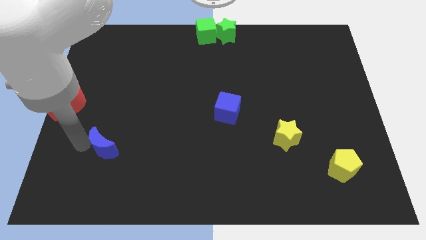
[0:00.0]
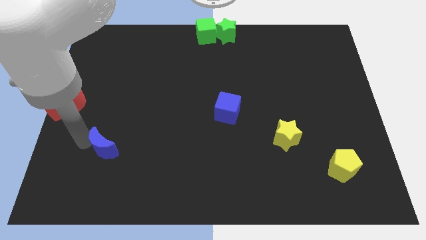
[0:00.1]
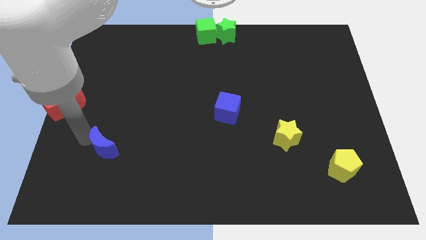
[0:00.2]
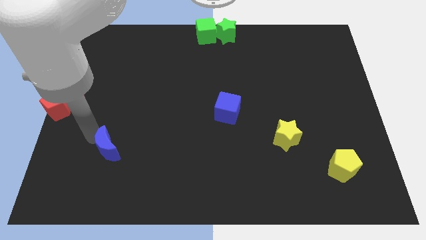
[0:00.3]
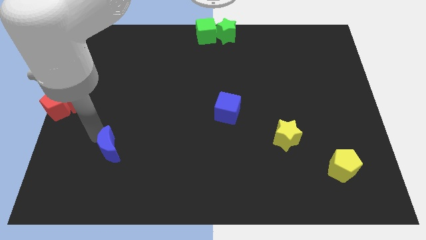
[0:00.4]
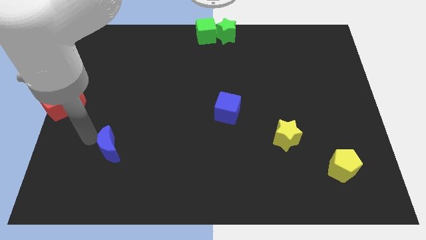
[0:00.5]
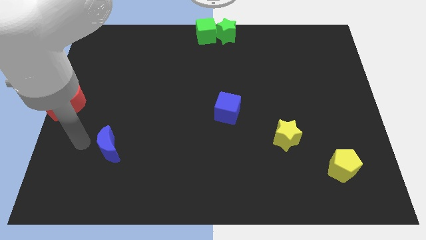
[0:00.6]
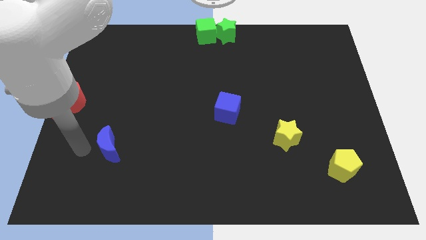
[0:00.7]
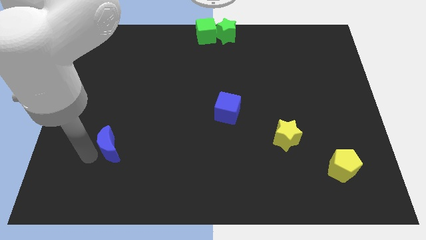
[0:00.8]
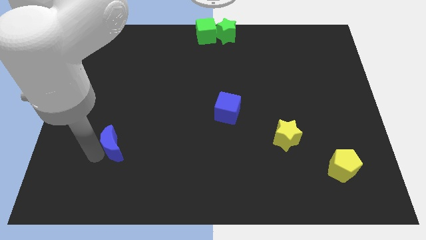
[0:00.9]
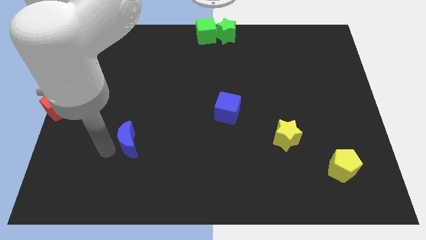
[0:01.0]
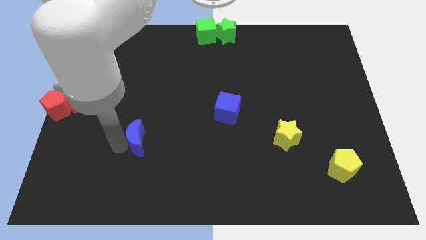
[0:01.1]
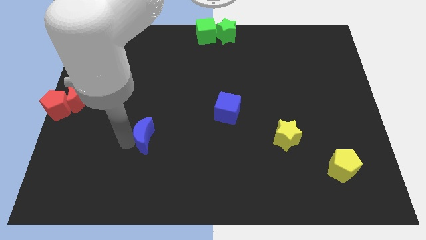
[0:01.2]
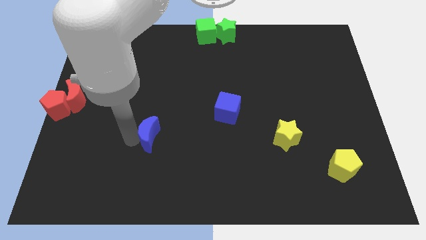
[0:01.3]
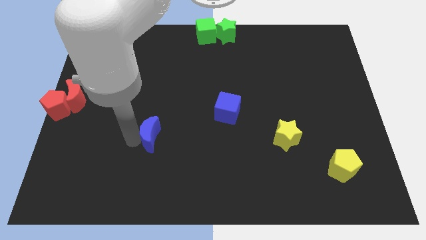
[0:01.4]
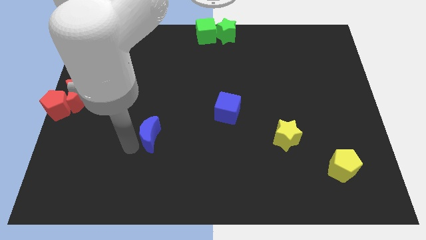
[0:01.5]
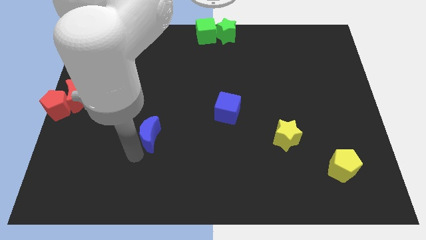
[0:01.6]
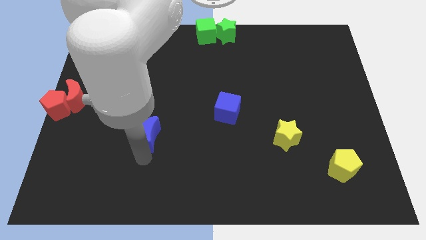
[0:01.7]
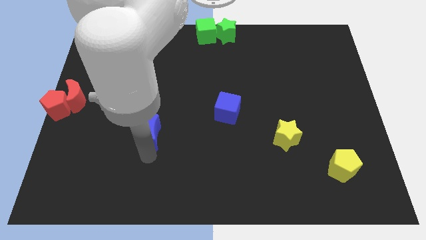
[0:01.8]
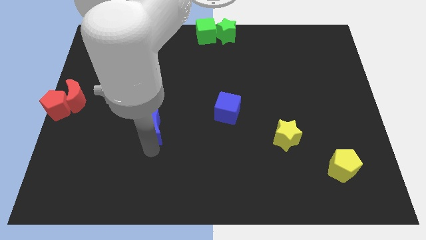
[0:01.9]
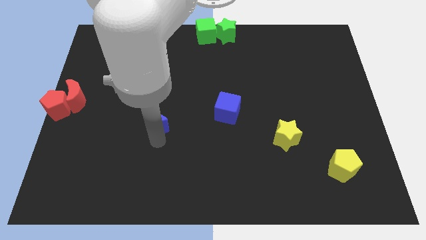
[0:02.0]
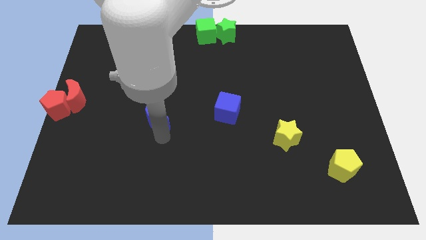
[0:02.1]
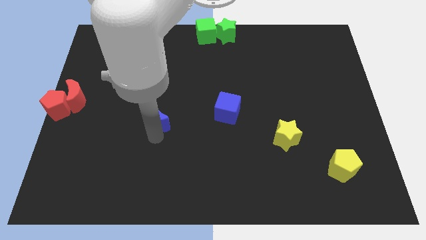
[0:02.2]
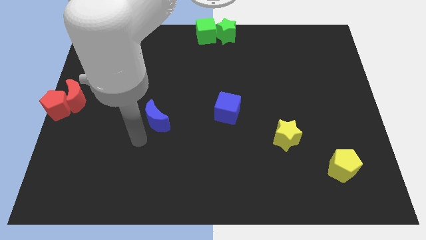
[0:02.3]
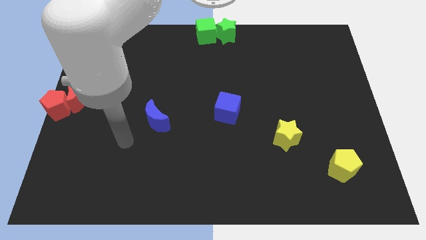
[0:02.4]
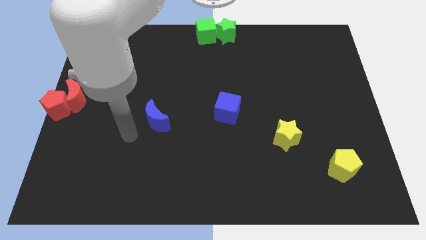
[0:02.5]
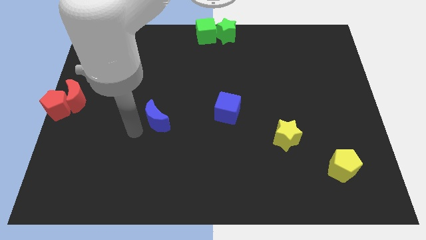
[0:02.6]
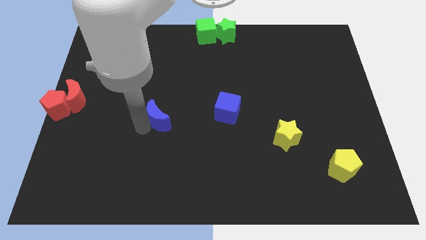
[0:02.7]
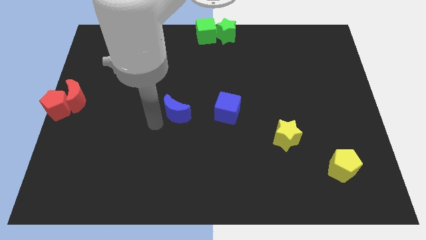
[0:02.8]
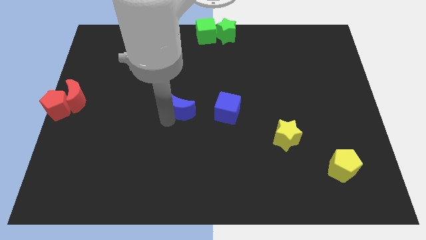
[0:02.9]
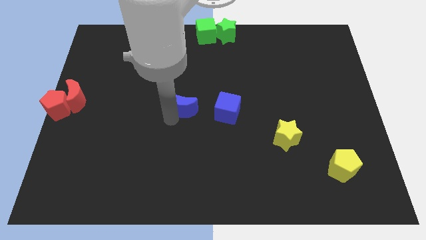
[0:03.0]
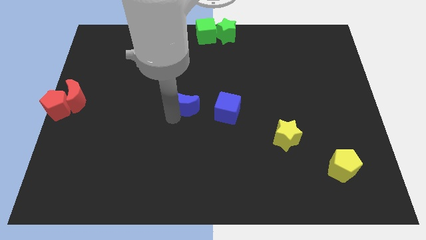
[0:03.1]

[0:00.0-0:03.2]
place the blue moon left to the blue cube

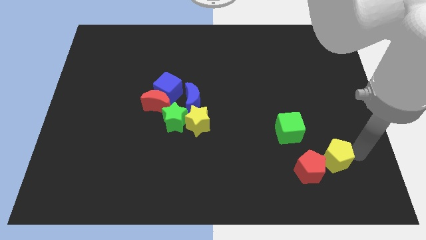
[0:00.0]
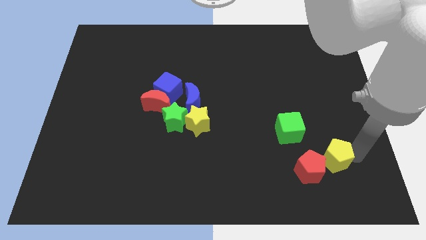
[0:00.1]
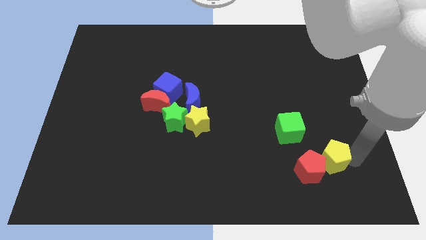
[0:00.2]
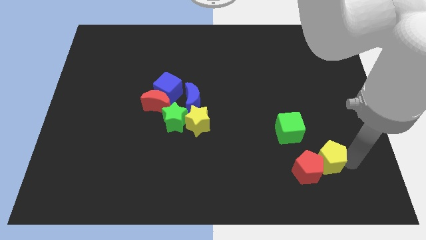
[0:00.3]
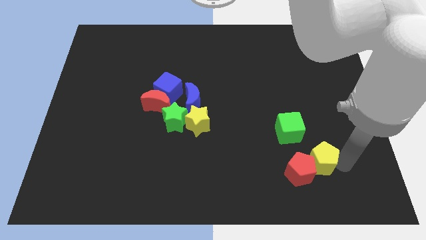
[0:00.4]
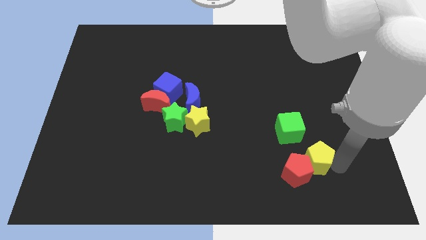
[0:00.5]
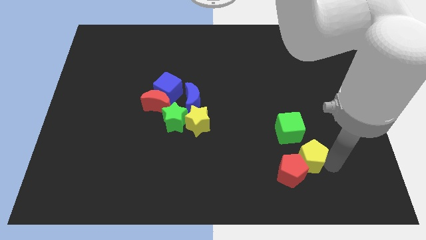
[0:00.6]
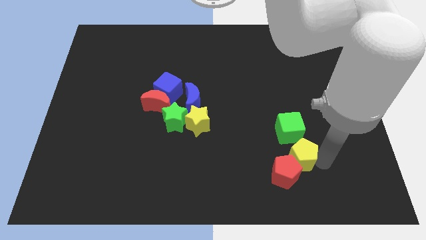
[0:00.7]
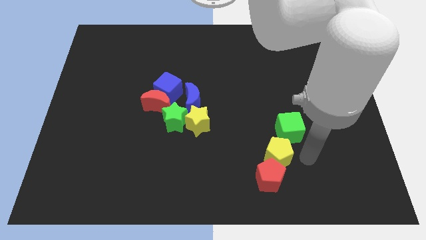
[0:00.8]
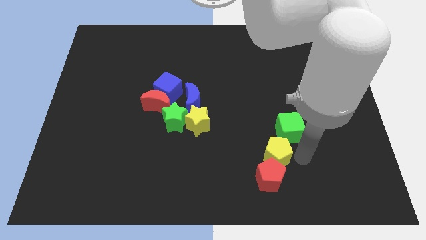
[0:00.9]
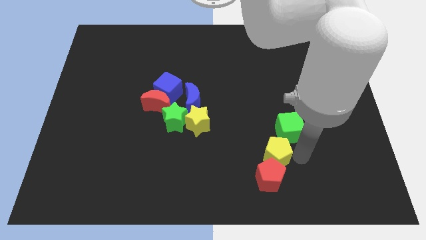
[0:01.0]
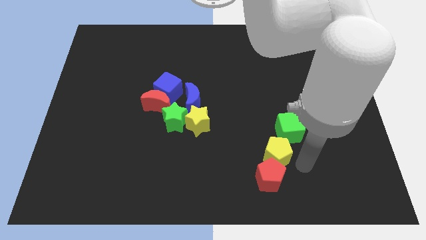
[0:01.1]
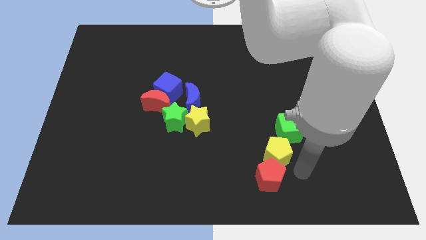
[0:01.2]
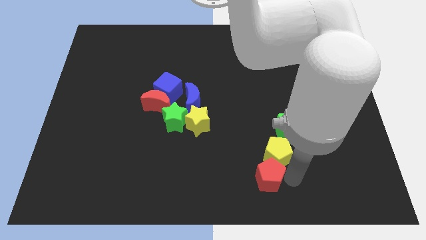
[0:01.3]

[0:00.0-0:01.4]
make a diagonal line with the yellow pentagon red pentagon and green cube

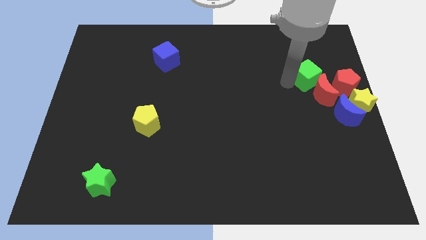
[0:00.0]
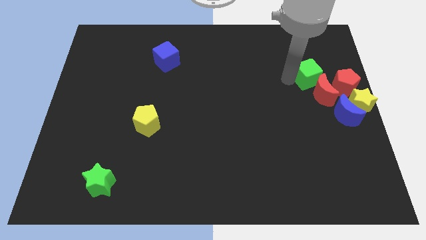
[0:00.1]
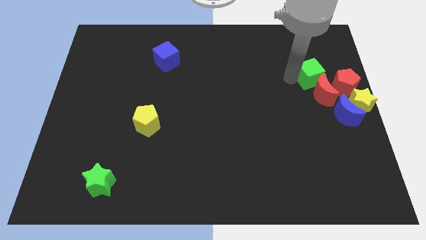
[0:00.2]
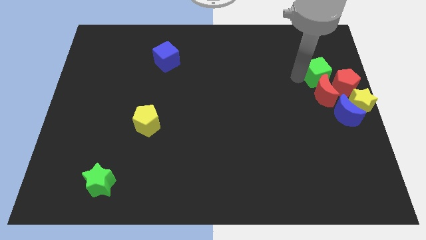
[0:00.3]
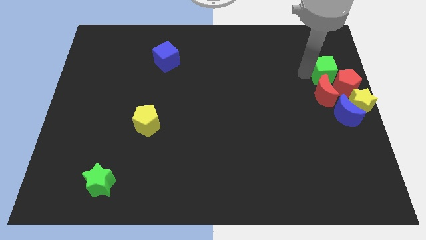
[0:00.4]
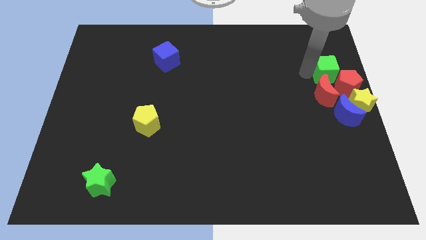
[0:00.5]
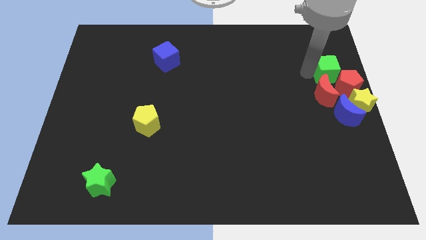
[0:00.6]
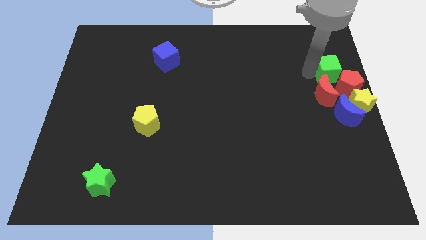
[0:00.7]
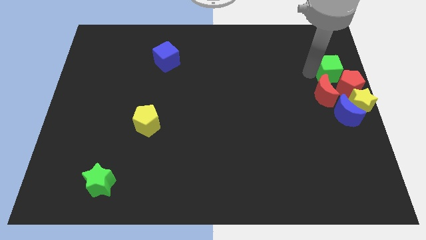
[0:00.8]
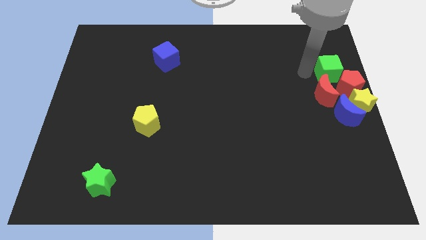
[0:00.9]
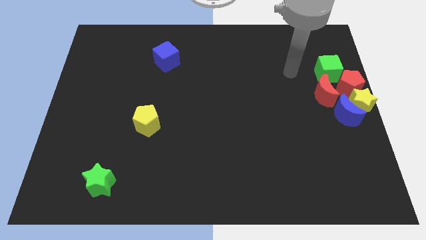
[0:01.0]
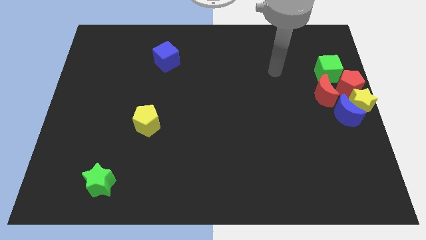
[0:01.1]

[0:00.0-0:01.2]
move green cube left above the red pentagon

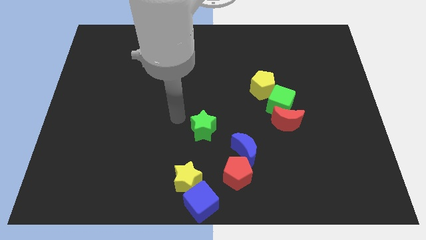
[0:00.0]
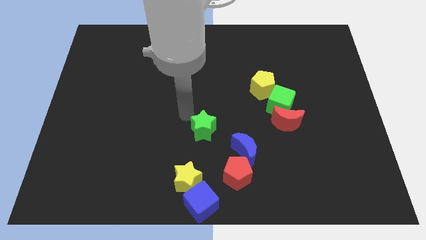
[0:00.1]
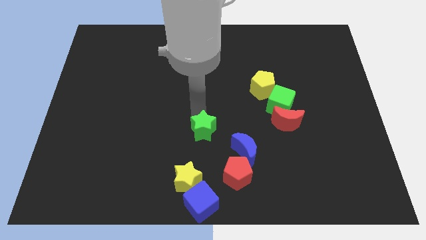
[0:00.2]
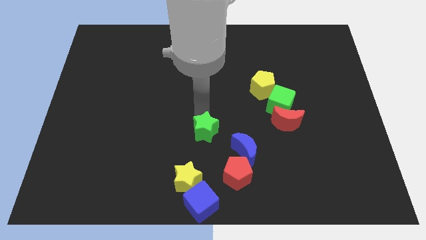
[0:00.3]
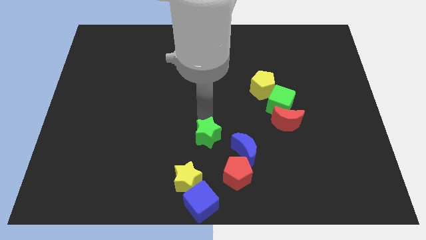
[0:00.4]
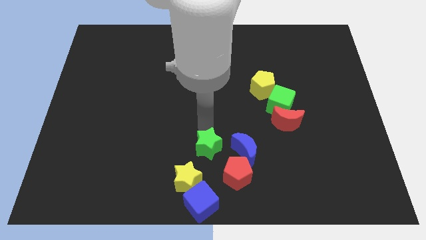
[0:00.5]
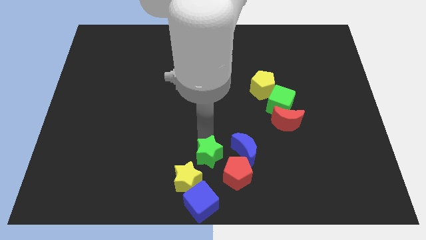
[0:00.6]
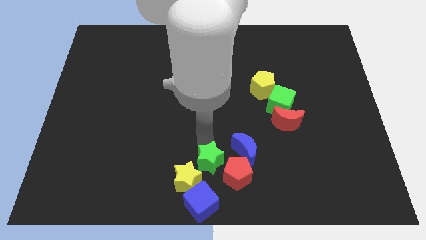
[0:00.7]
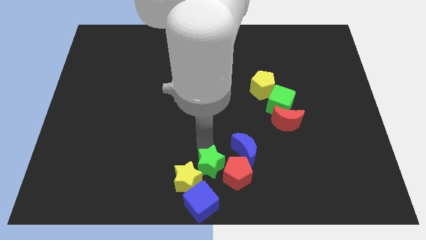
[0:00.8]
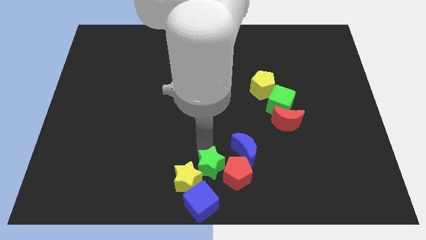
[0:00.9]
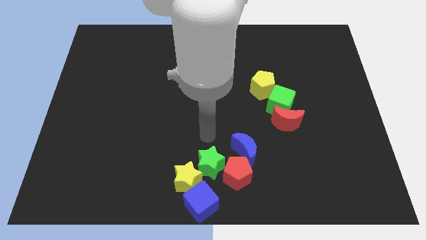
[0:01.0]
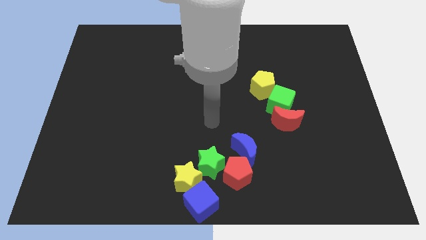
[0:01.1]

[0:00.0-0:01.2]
drag green star downwards

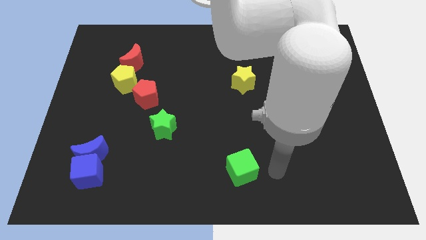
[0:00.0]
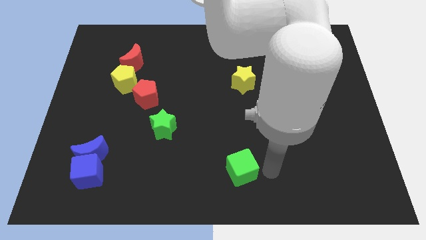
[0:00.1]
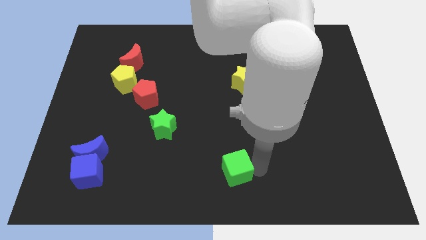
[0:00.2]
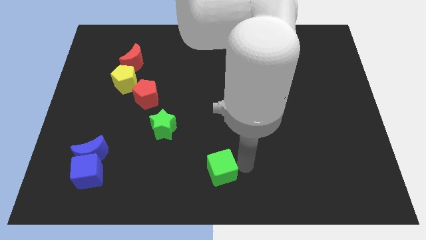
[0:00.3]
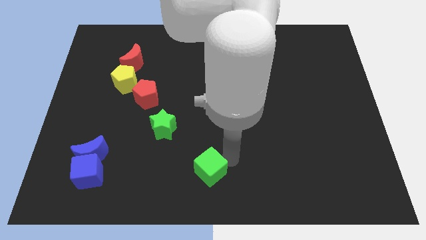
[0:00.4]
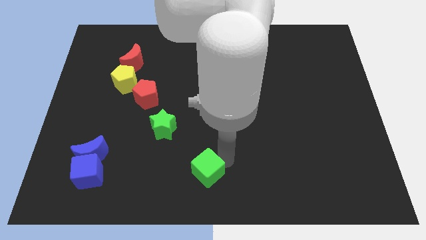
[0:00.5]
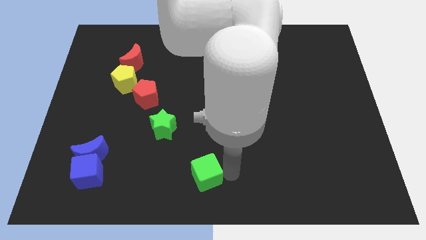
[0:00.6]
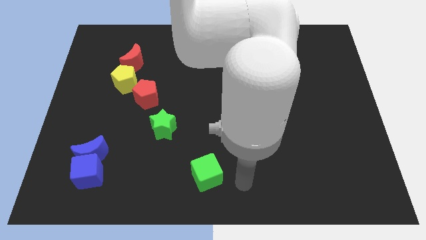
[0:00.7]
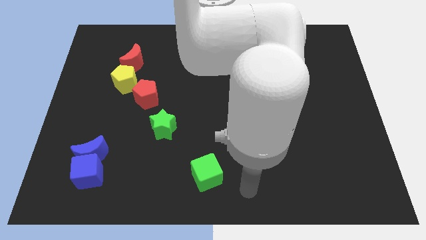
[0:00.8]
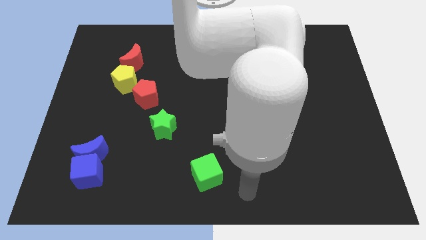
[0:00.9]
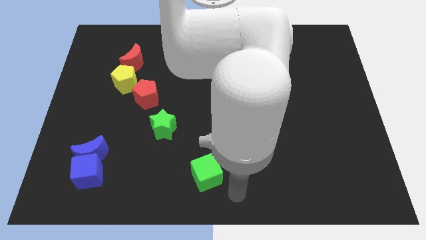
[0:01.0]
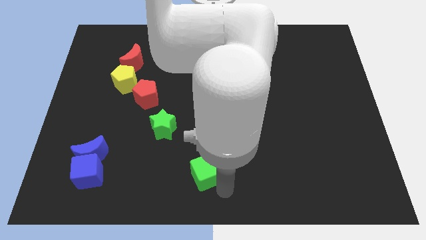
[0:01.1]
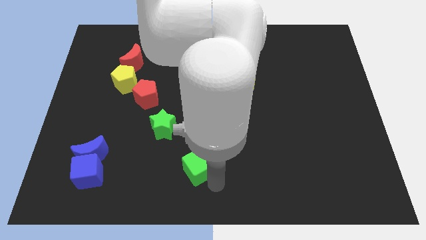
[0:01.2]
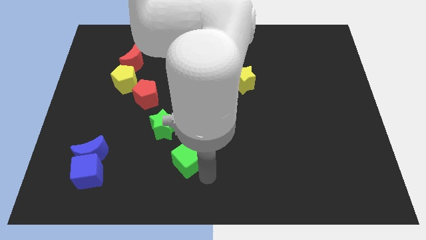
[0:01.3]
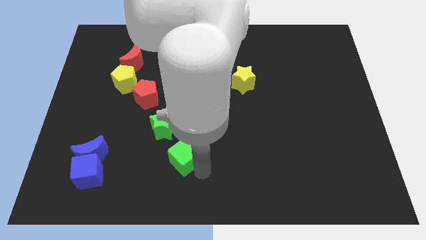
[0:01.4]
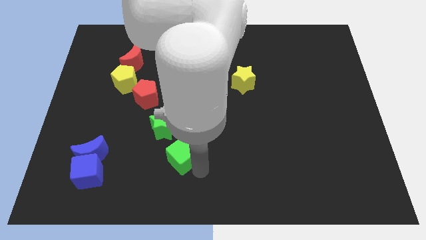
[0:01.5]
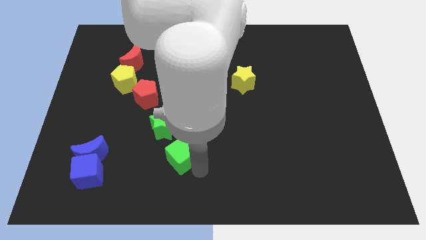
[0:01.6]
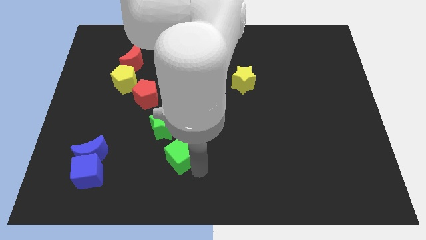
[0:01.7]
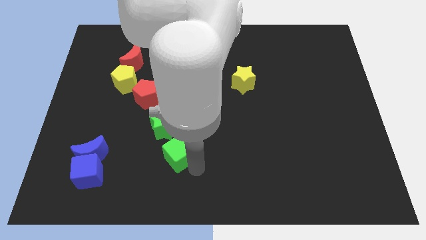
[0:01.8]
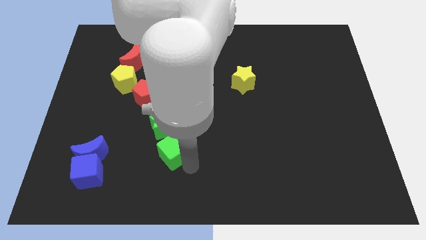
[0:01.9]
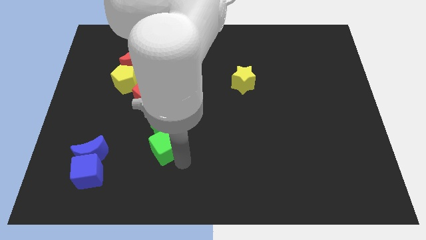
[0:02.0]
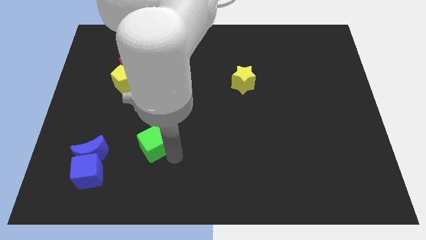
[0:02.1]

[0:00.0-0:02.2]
place the green cube to the left side of the blue moon
